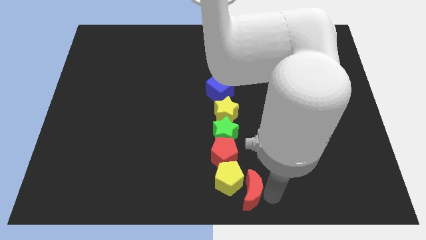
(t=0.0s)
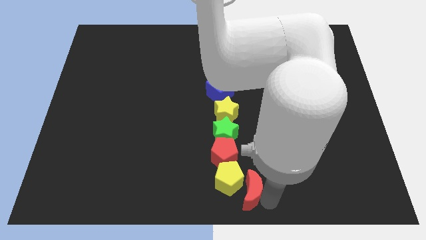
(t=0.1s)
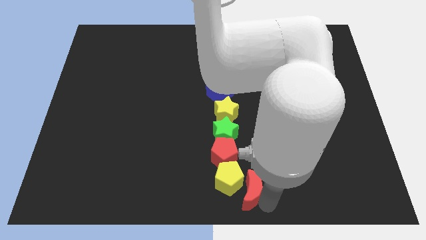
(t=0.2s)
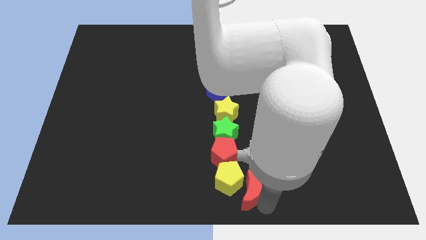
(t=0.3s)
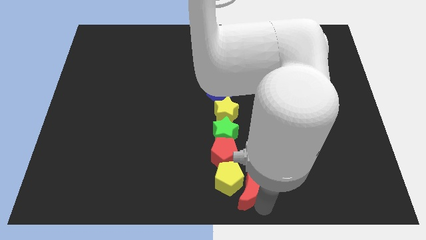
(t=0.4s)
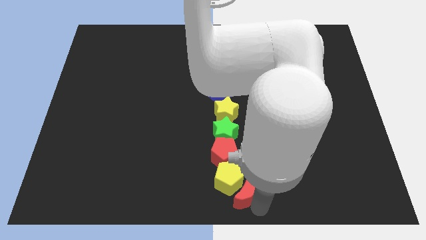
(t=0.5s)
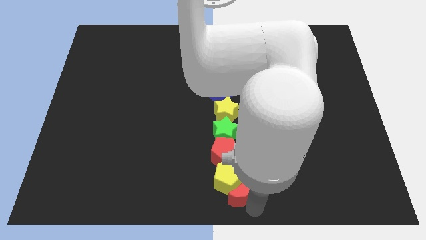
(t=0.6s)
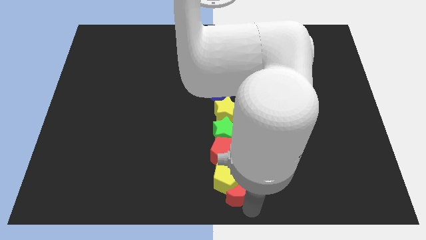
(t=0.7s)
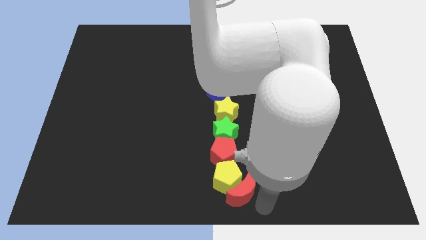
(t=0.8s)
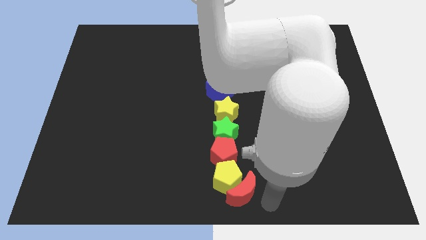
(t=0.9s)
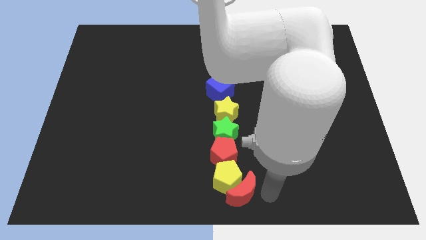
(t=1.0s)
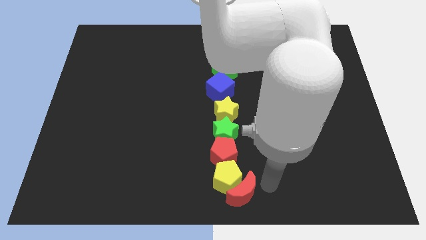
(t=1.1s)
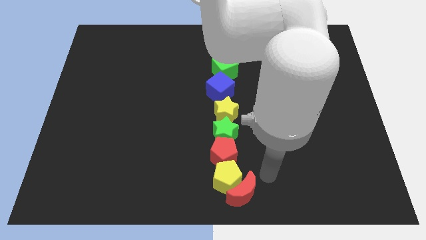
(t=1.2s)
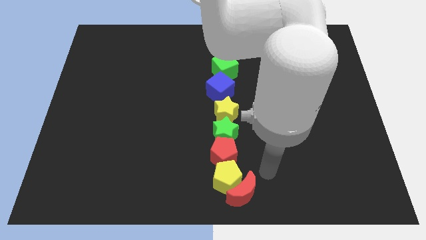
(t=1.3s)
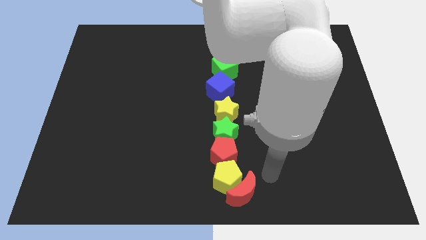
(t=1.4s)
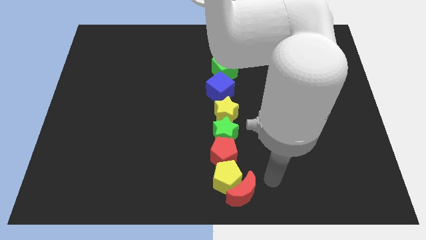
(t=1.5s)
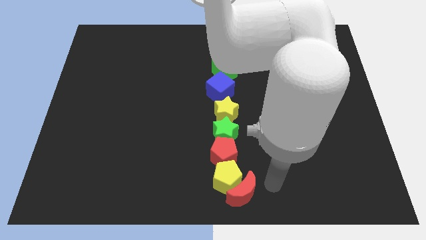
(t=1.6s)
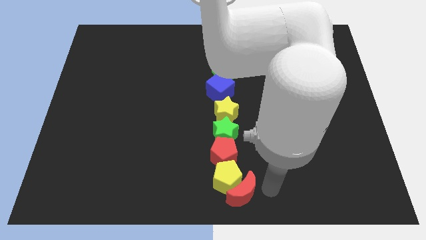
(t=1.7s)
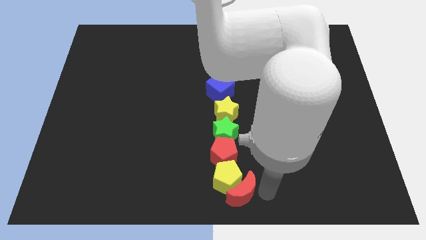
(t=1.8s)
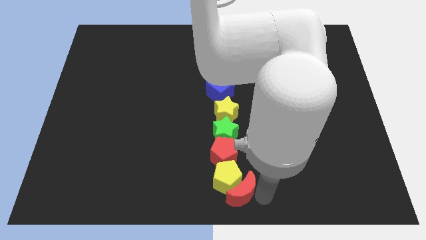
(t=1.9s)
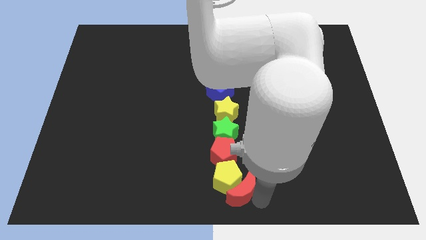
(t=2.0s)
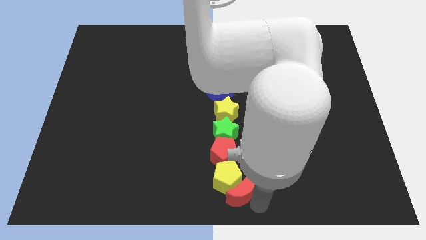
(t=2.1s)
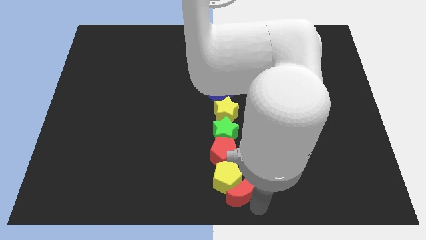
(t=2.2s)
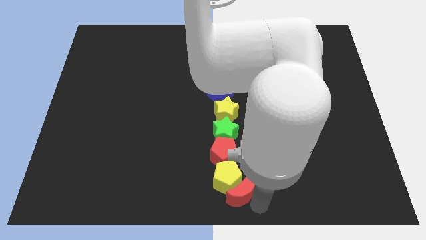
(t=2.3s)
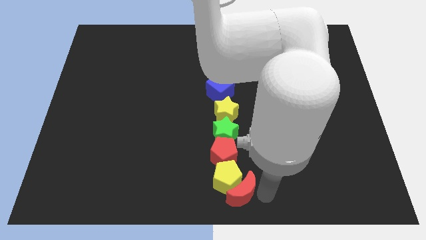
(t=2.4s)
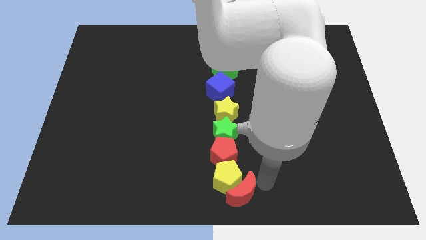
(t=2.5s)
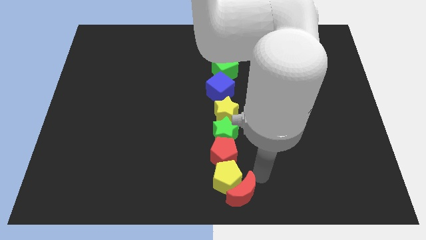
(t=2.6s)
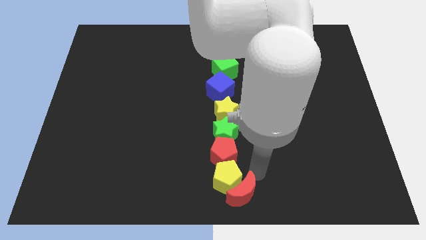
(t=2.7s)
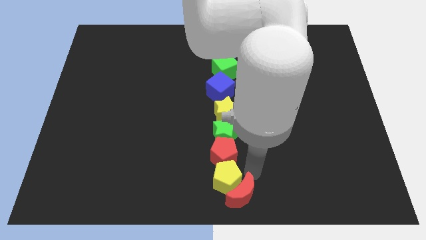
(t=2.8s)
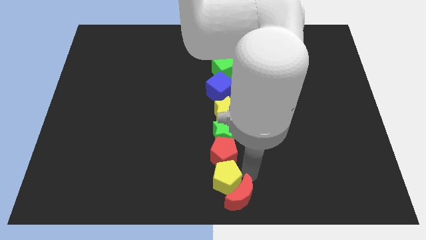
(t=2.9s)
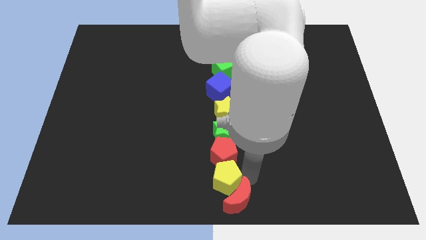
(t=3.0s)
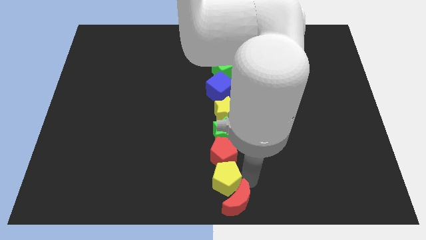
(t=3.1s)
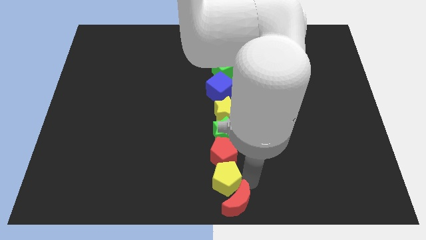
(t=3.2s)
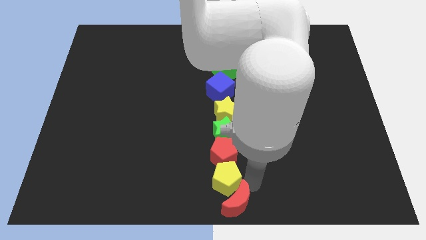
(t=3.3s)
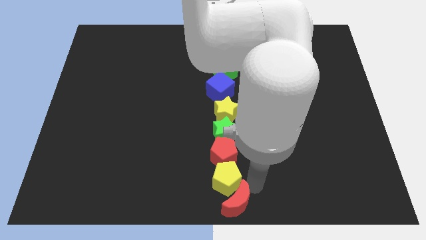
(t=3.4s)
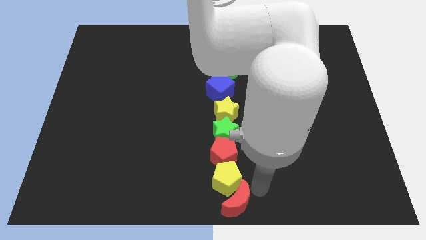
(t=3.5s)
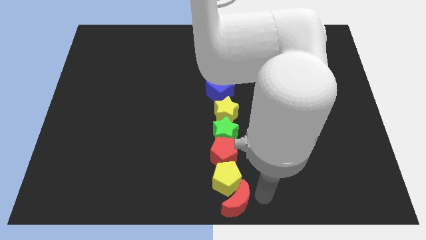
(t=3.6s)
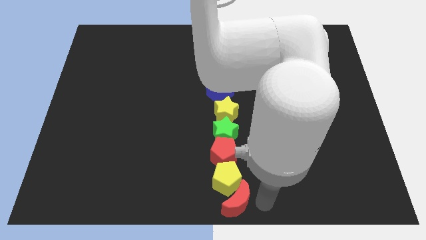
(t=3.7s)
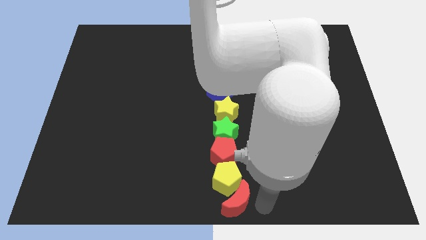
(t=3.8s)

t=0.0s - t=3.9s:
place red moon below yellow pentagon

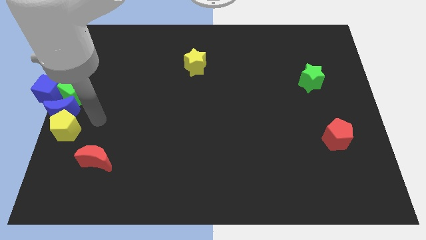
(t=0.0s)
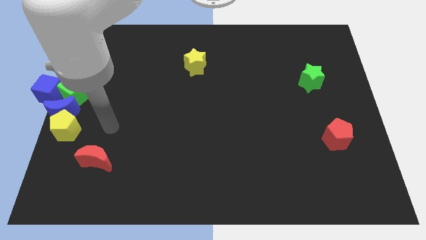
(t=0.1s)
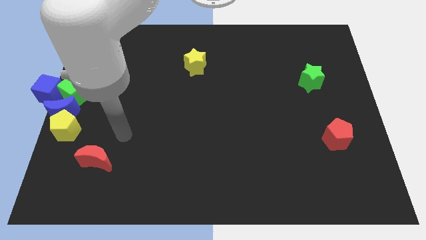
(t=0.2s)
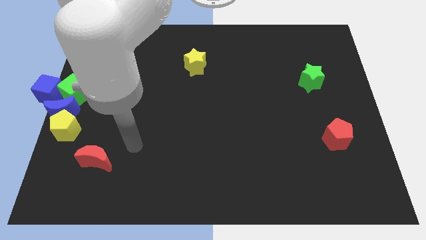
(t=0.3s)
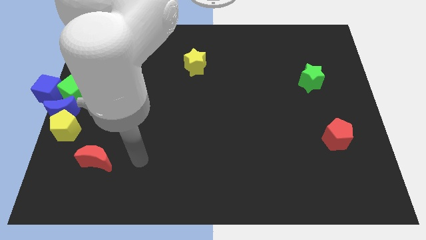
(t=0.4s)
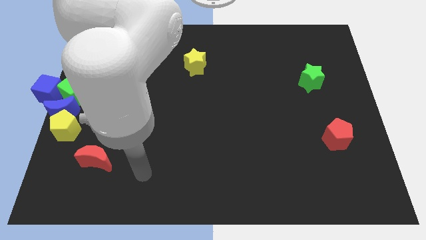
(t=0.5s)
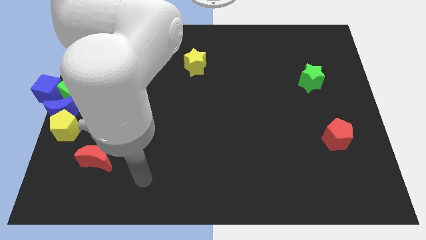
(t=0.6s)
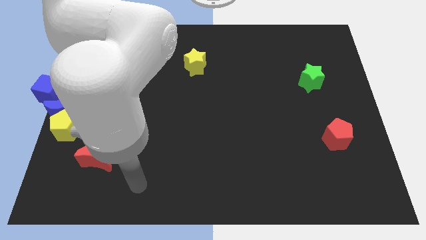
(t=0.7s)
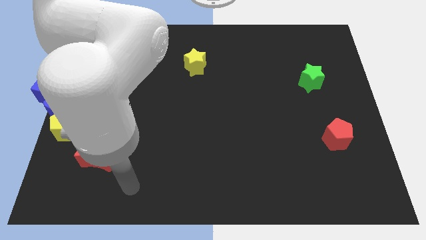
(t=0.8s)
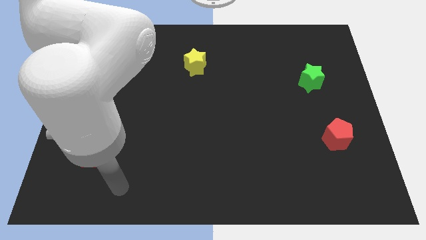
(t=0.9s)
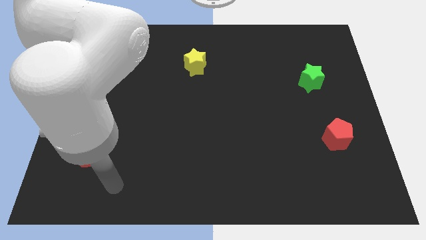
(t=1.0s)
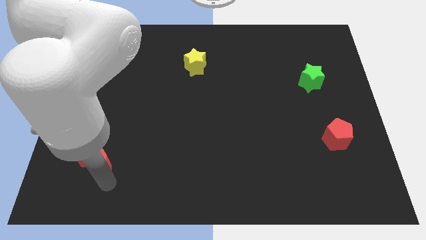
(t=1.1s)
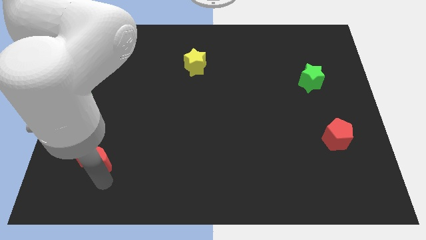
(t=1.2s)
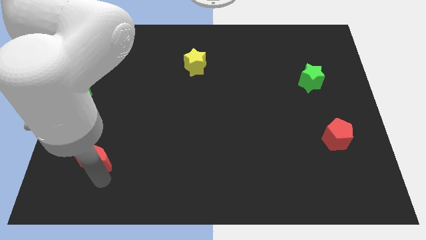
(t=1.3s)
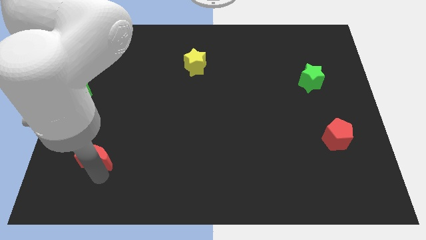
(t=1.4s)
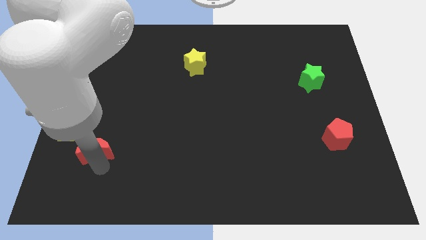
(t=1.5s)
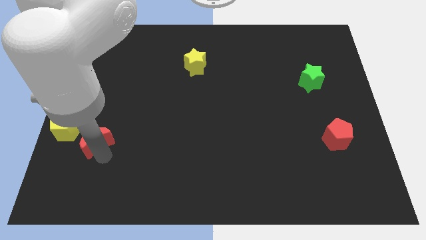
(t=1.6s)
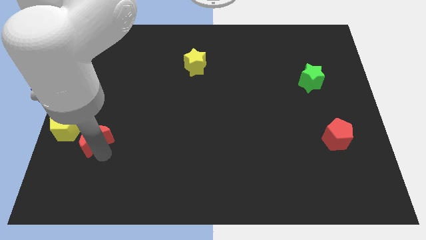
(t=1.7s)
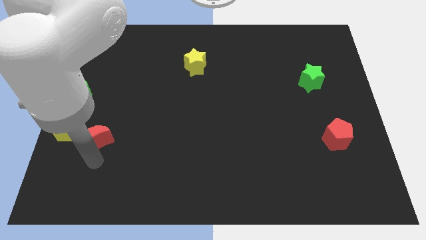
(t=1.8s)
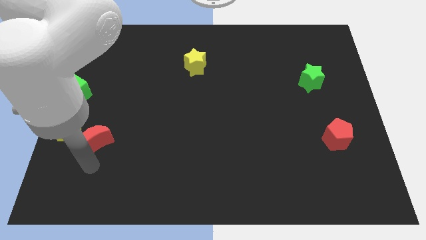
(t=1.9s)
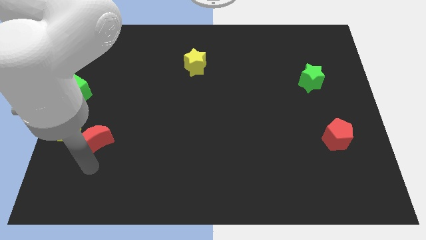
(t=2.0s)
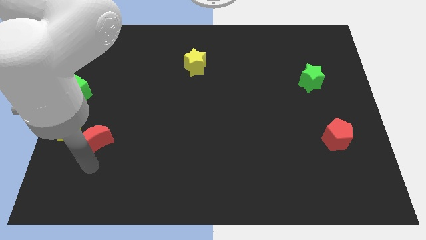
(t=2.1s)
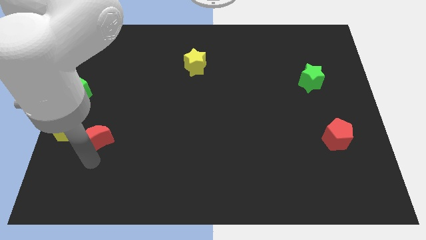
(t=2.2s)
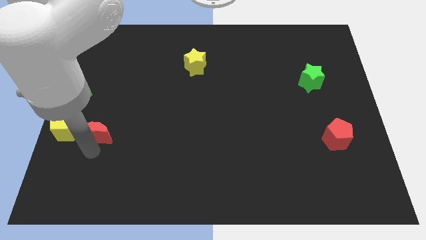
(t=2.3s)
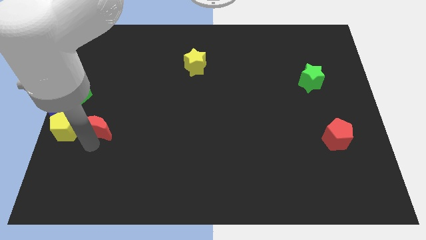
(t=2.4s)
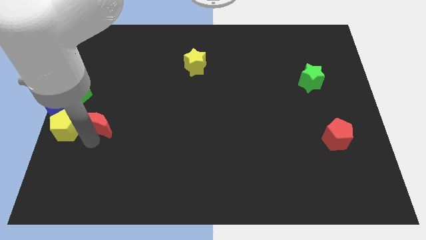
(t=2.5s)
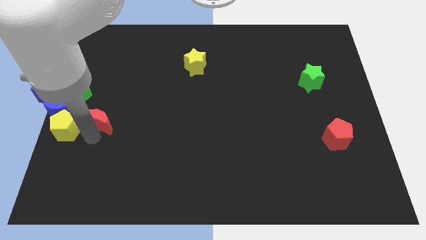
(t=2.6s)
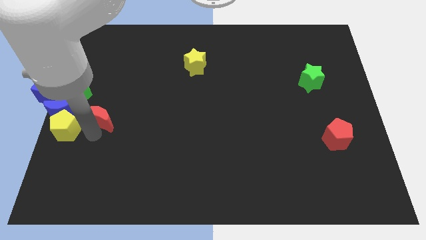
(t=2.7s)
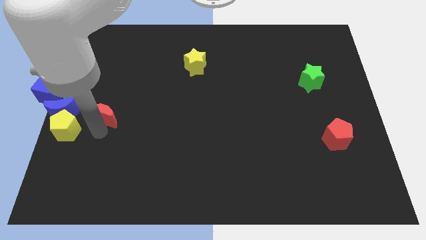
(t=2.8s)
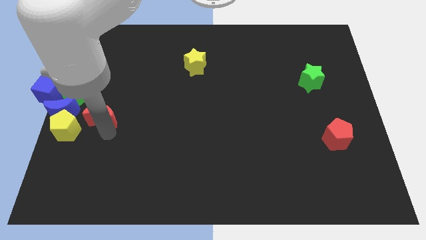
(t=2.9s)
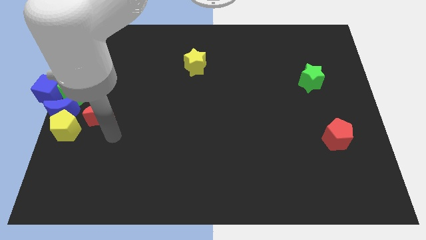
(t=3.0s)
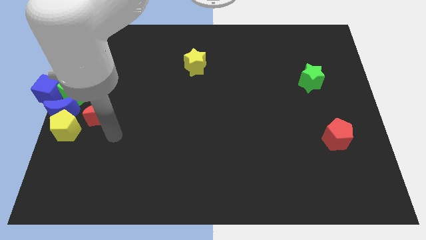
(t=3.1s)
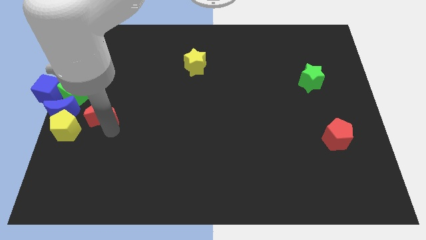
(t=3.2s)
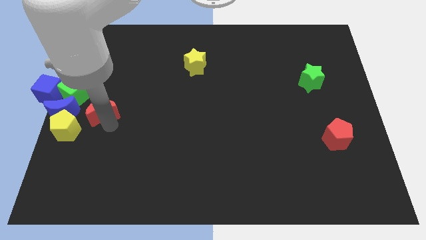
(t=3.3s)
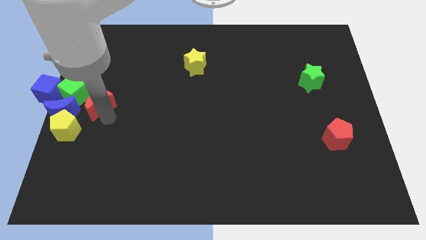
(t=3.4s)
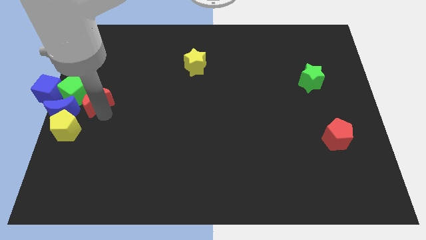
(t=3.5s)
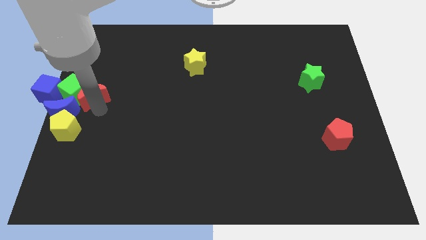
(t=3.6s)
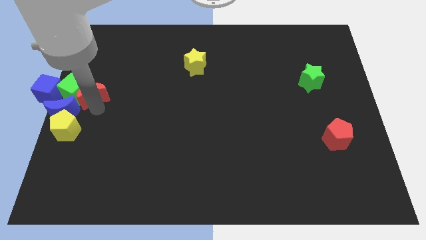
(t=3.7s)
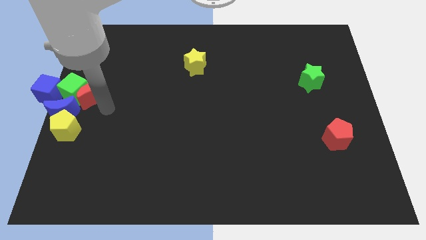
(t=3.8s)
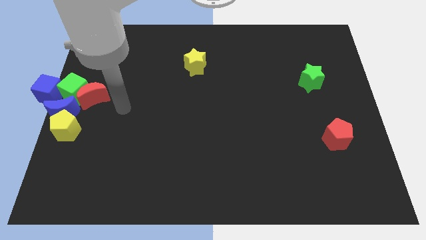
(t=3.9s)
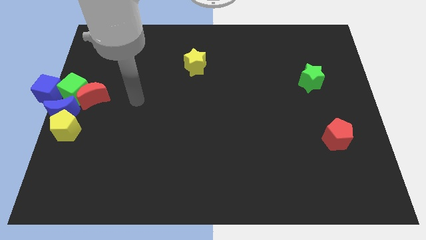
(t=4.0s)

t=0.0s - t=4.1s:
move the red crescent to the group of blocks at the left center of the board

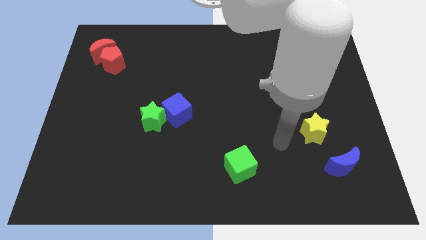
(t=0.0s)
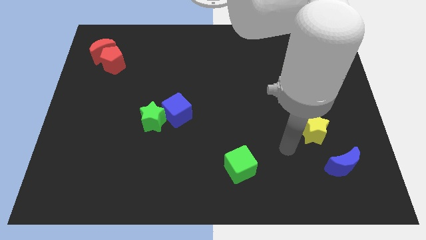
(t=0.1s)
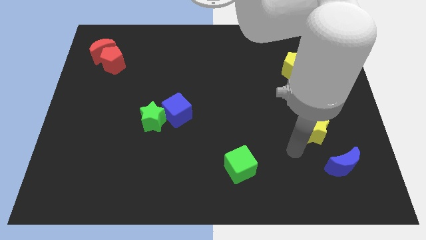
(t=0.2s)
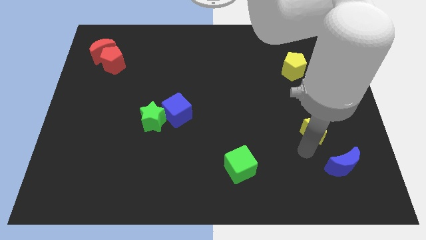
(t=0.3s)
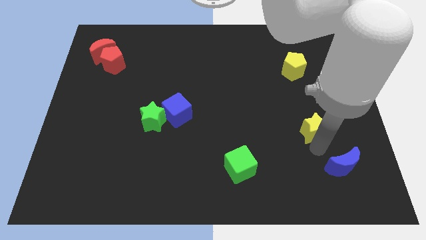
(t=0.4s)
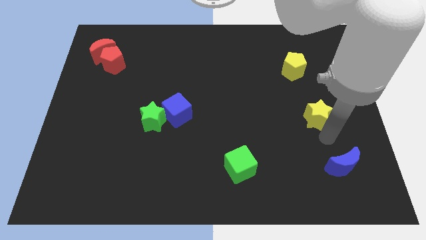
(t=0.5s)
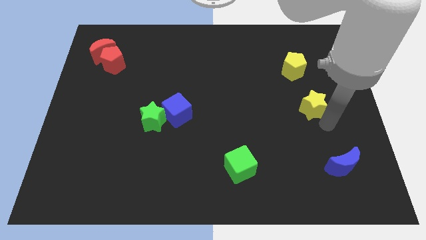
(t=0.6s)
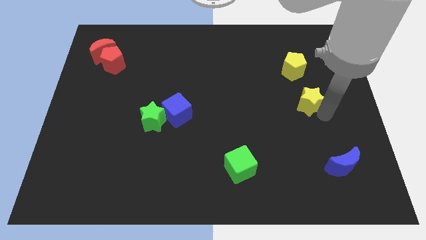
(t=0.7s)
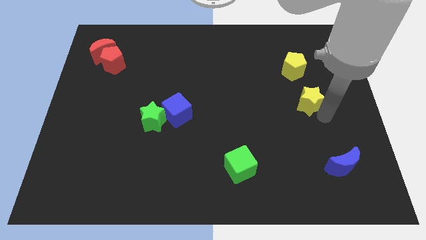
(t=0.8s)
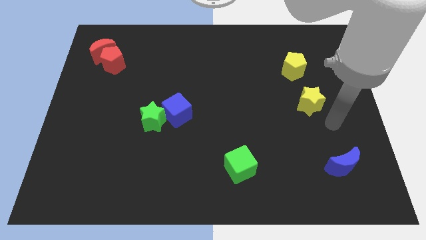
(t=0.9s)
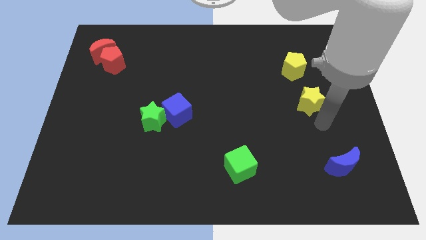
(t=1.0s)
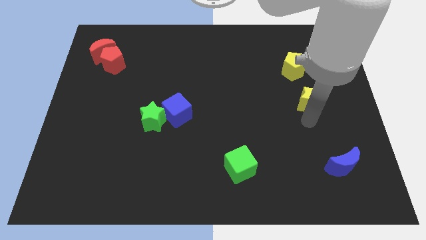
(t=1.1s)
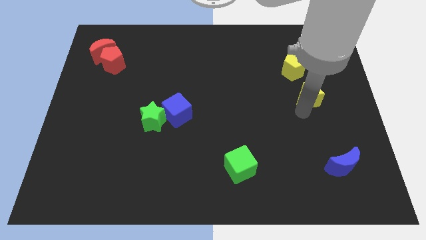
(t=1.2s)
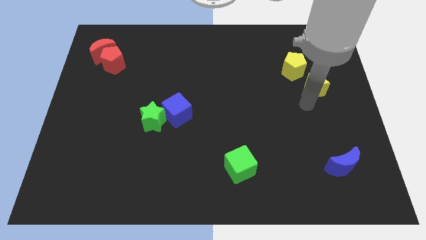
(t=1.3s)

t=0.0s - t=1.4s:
move the yellow star towards yellow pentagon
